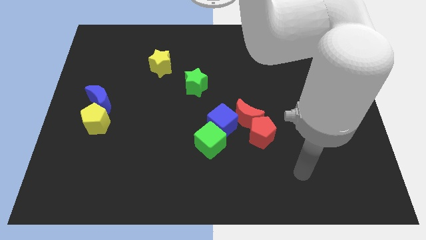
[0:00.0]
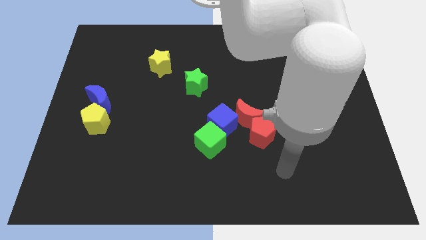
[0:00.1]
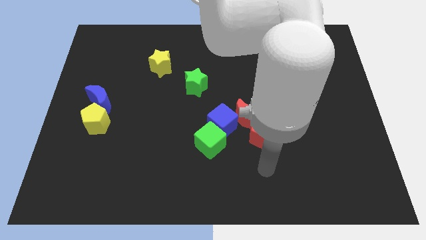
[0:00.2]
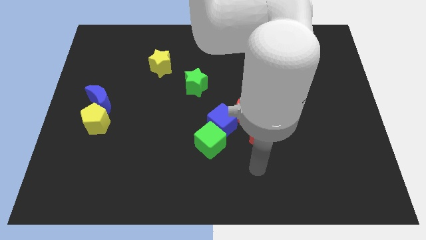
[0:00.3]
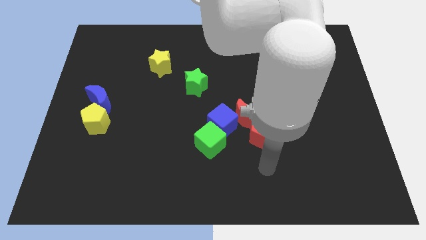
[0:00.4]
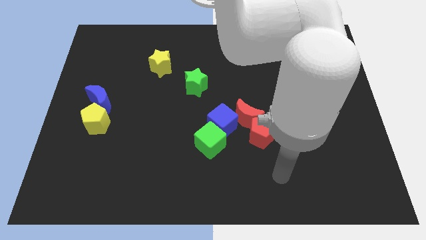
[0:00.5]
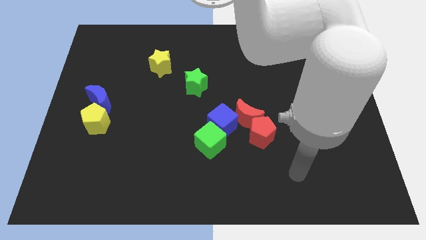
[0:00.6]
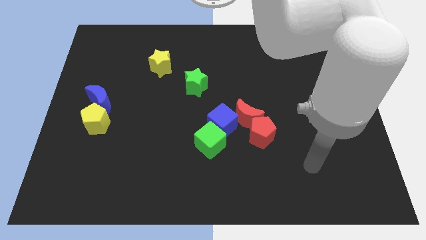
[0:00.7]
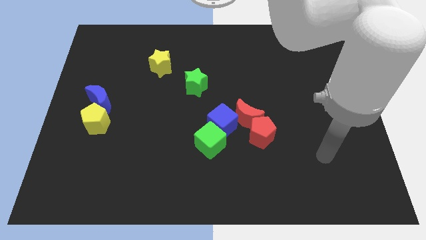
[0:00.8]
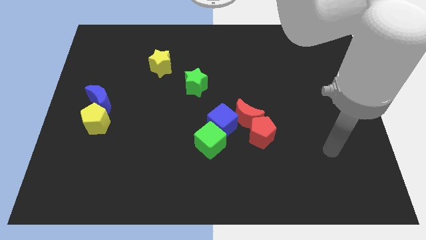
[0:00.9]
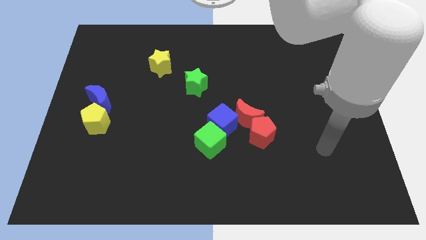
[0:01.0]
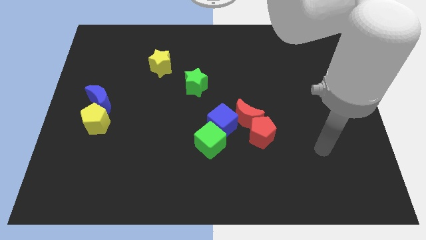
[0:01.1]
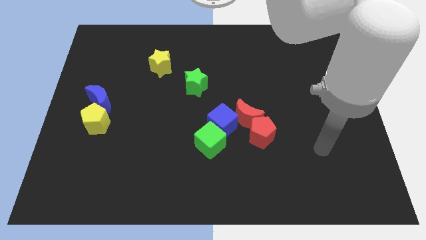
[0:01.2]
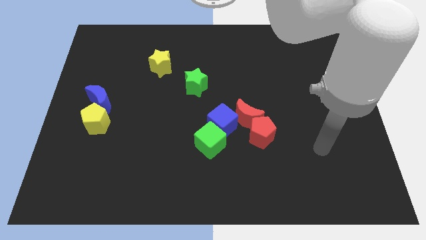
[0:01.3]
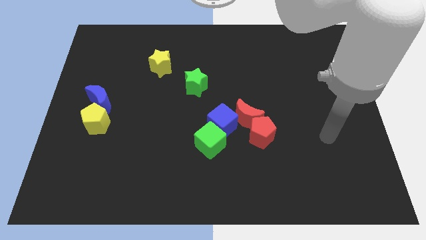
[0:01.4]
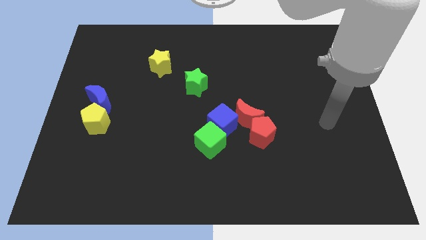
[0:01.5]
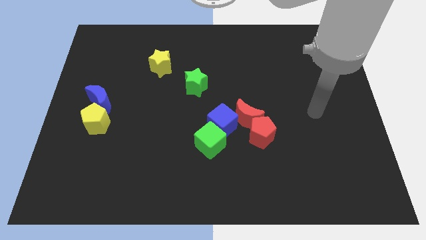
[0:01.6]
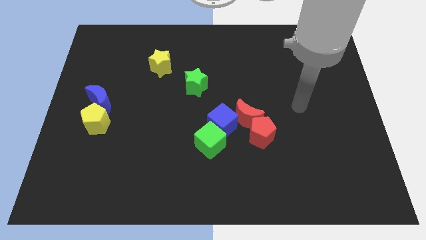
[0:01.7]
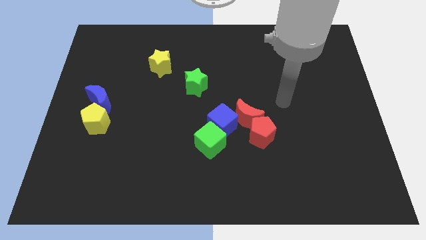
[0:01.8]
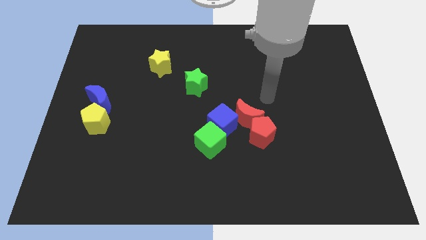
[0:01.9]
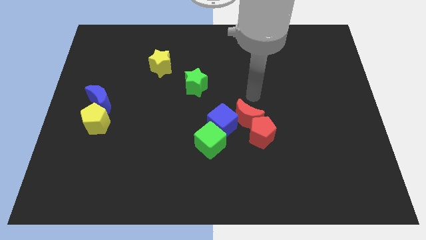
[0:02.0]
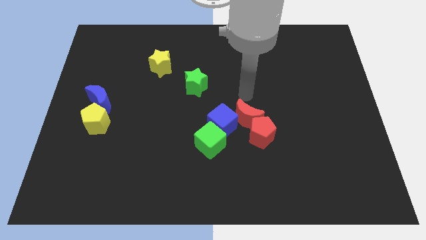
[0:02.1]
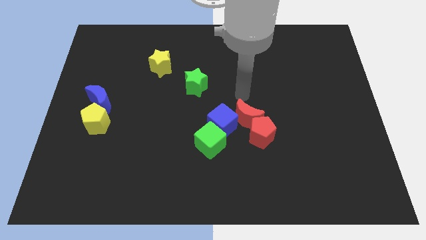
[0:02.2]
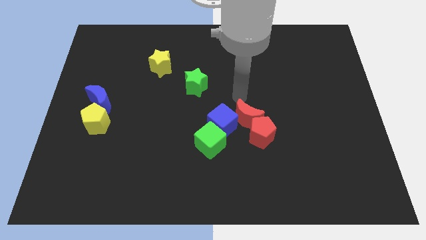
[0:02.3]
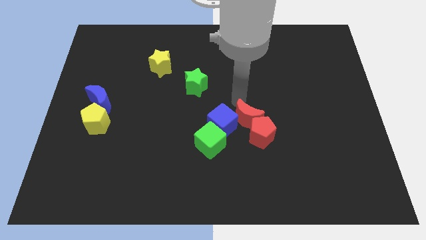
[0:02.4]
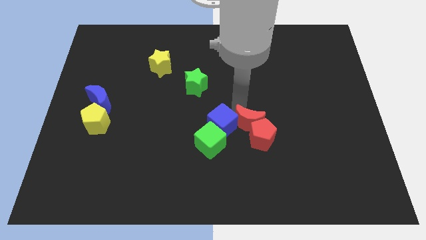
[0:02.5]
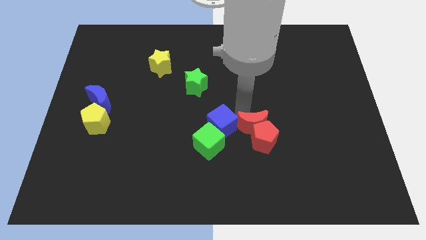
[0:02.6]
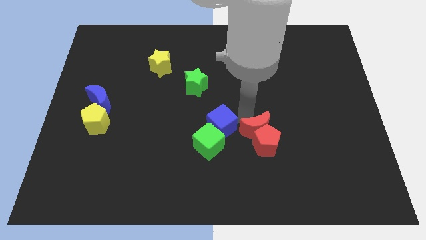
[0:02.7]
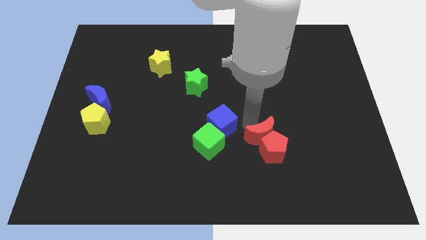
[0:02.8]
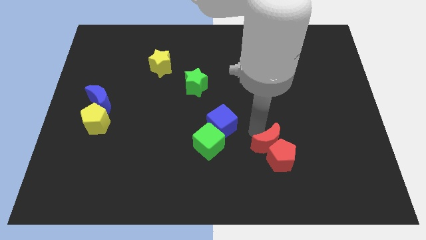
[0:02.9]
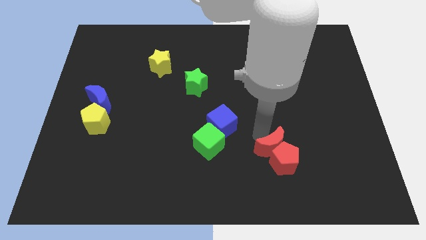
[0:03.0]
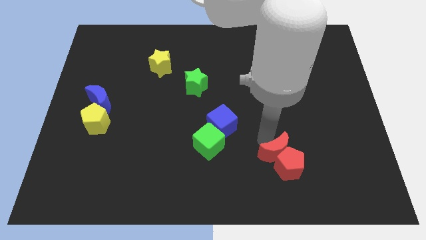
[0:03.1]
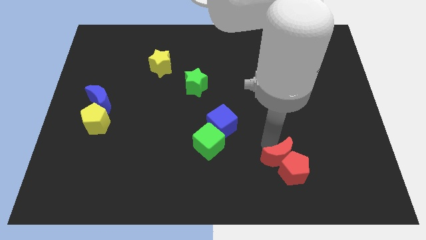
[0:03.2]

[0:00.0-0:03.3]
separate the red blocks from the other two blocks

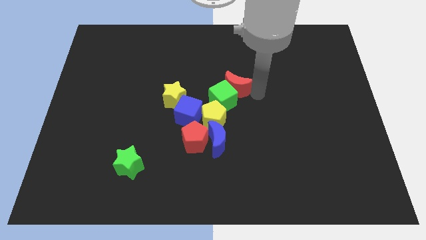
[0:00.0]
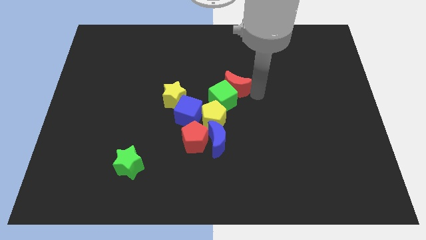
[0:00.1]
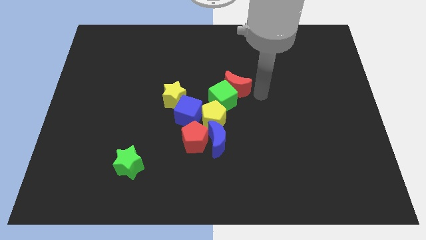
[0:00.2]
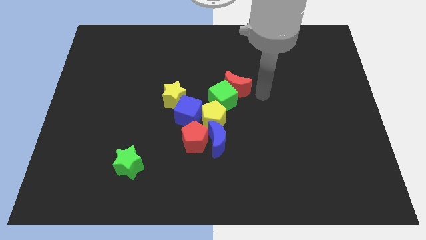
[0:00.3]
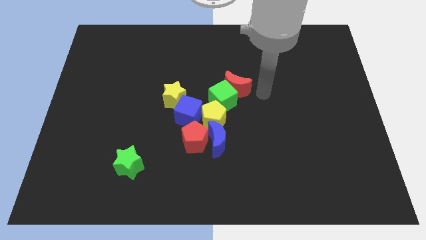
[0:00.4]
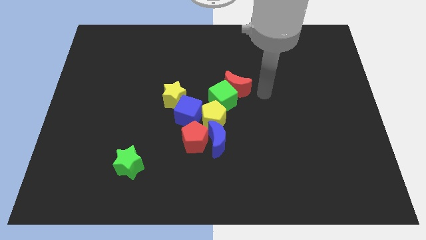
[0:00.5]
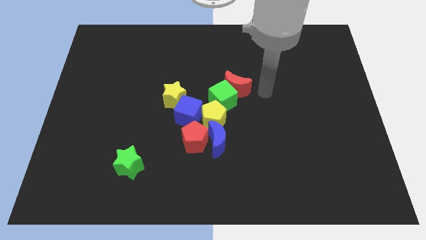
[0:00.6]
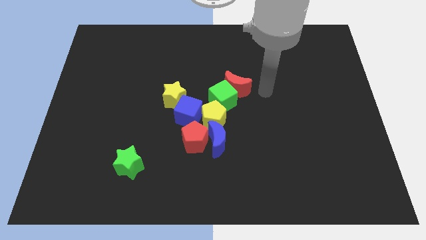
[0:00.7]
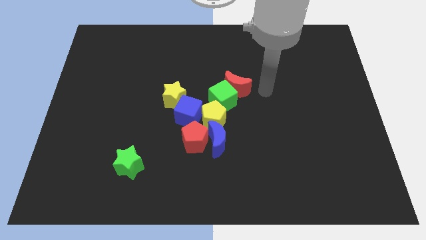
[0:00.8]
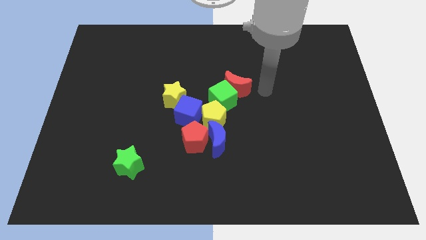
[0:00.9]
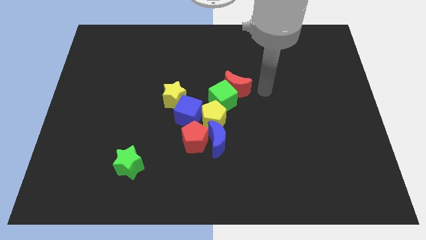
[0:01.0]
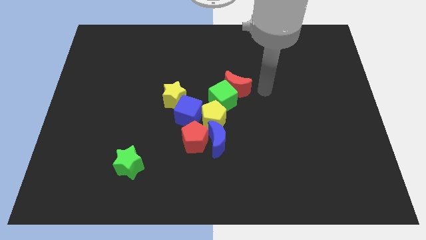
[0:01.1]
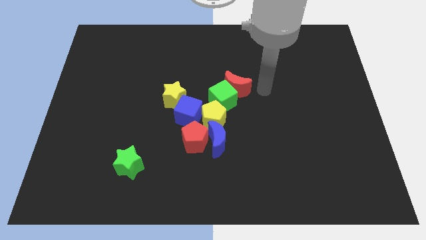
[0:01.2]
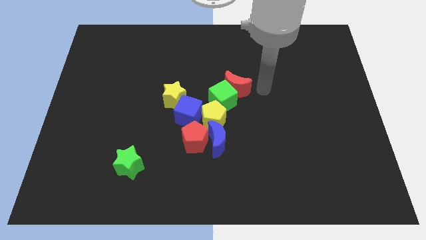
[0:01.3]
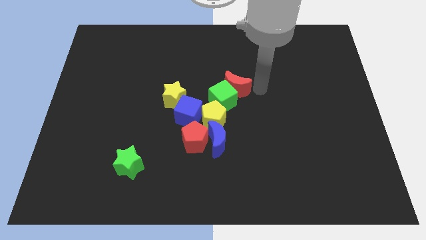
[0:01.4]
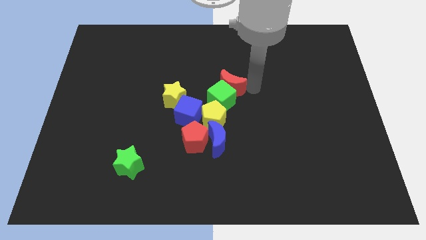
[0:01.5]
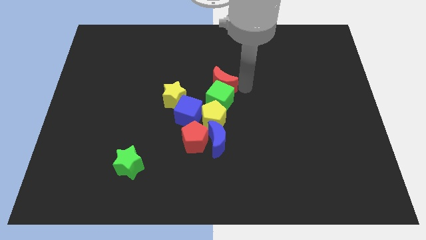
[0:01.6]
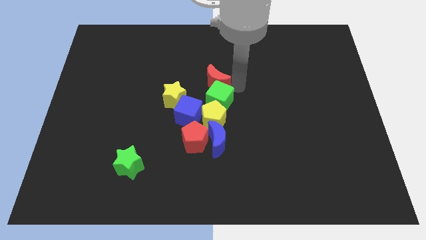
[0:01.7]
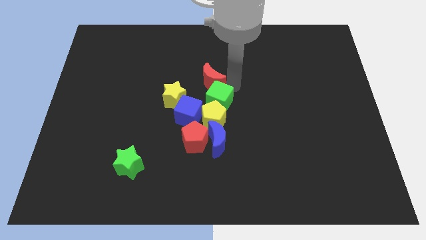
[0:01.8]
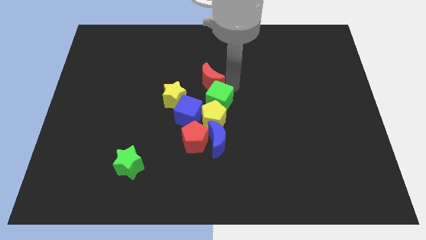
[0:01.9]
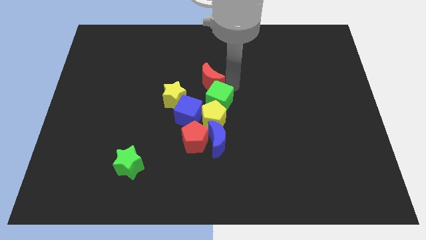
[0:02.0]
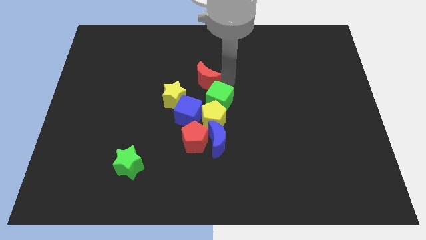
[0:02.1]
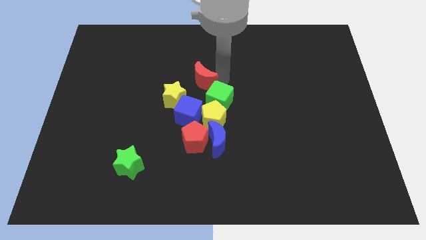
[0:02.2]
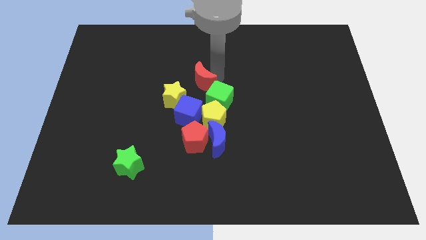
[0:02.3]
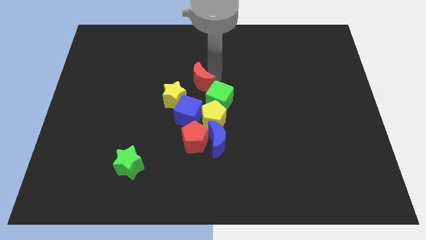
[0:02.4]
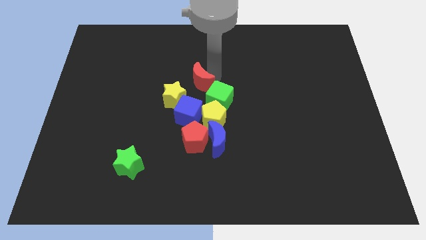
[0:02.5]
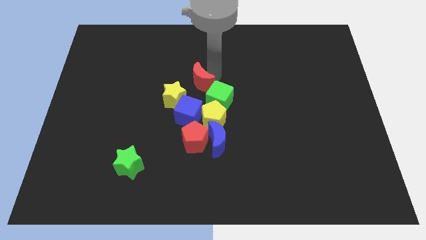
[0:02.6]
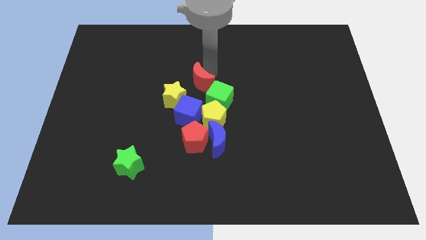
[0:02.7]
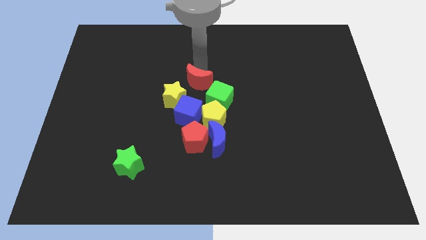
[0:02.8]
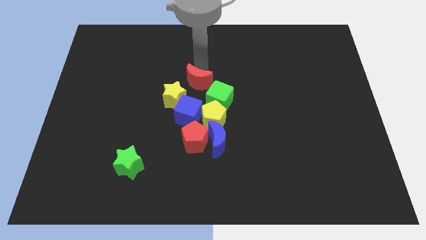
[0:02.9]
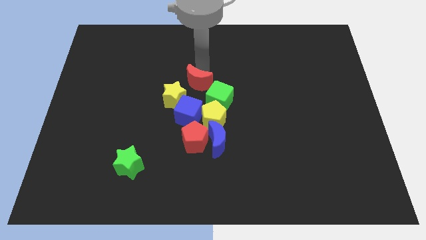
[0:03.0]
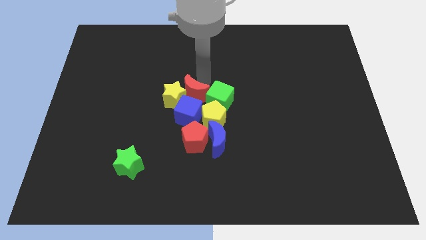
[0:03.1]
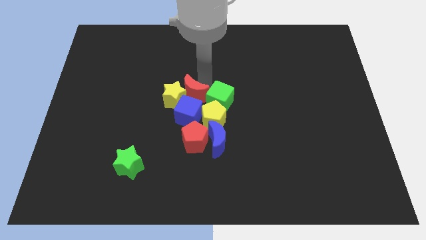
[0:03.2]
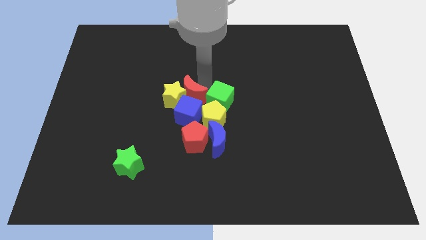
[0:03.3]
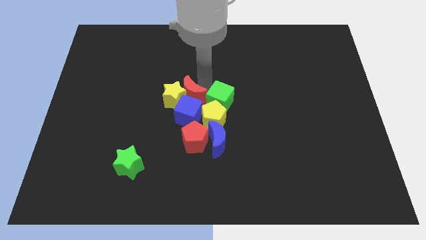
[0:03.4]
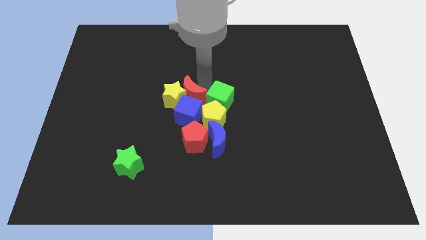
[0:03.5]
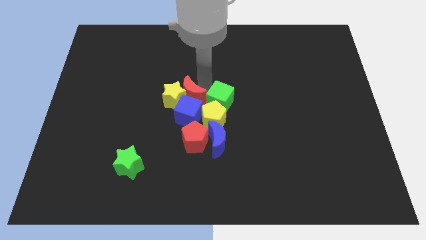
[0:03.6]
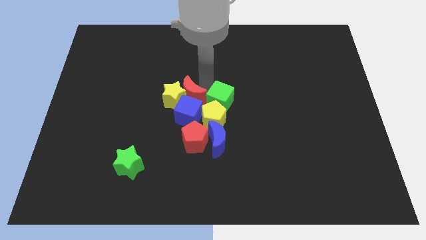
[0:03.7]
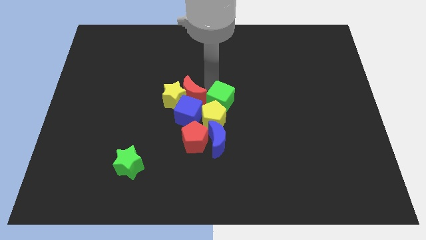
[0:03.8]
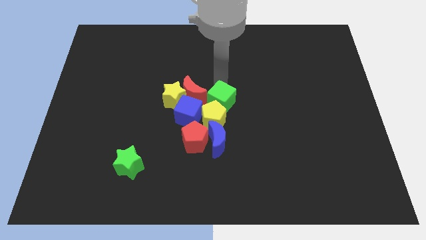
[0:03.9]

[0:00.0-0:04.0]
move red moon above the blue cube

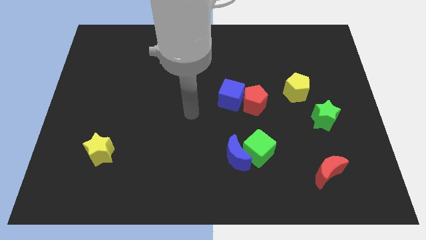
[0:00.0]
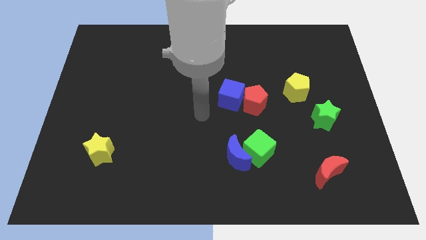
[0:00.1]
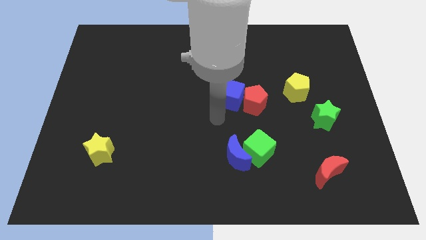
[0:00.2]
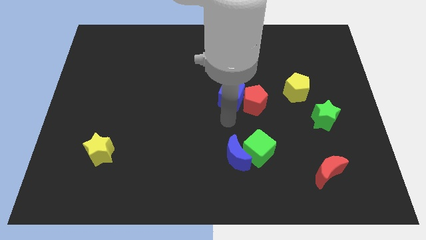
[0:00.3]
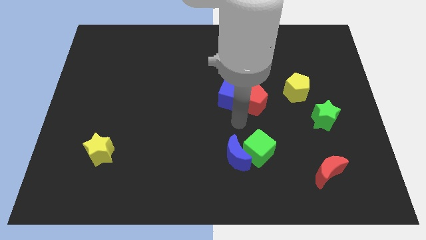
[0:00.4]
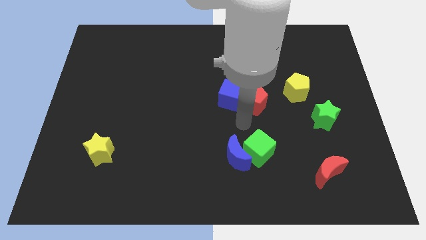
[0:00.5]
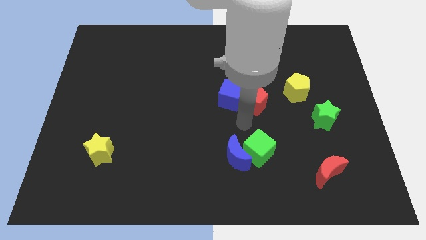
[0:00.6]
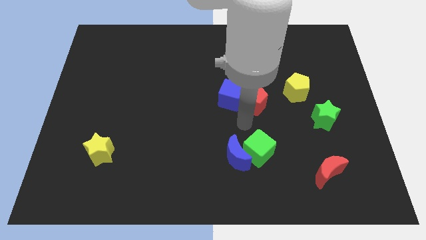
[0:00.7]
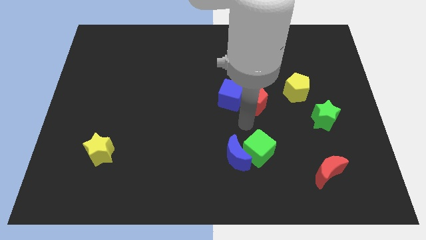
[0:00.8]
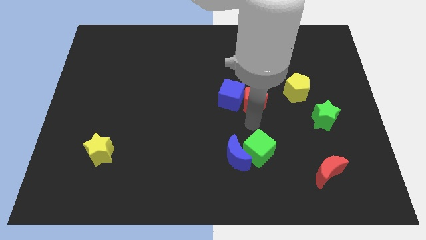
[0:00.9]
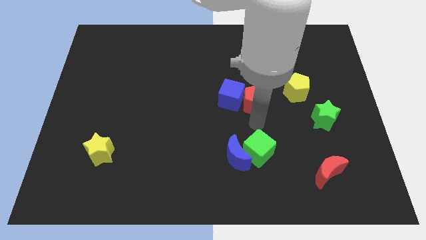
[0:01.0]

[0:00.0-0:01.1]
place arm at the bottom of red pentagon

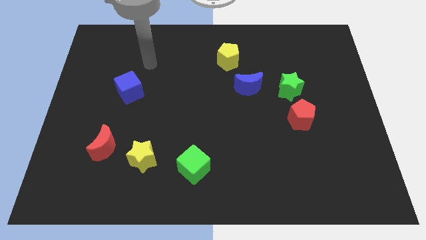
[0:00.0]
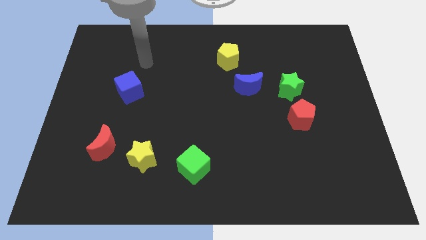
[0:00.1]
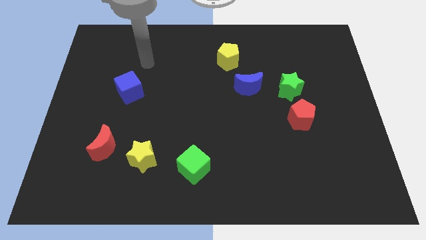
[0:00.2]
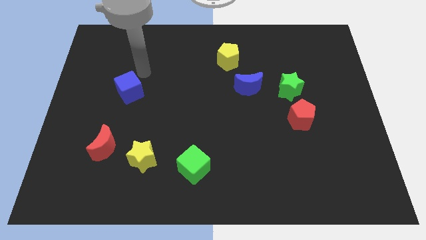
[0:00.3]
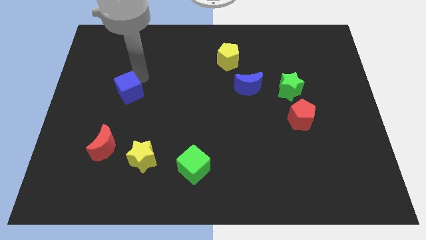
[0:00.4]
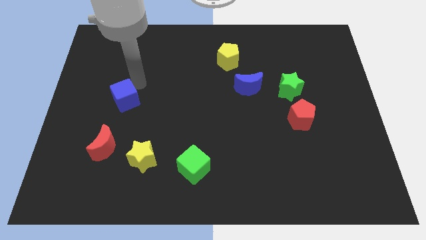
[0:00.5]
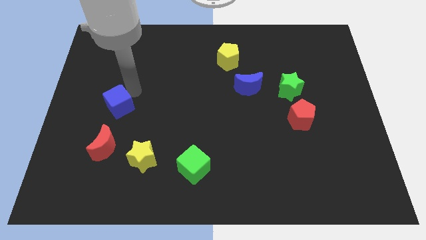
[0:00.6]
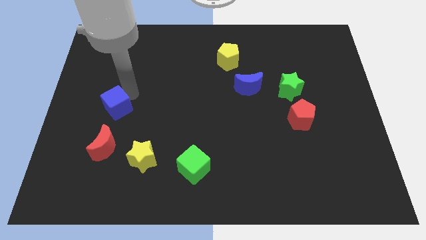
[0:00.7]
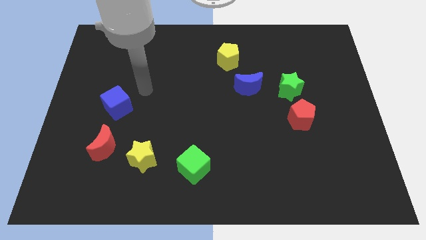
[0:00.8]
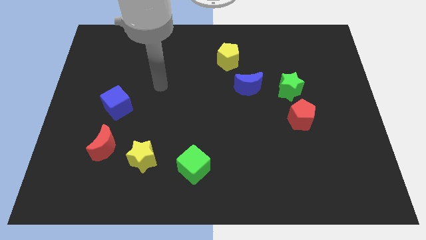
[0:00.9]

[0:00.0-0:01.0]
push the blue cube towards the bottom of the board
